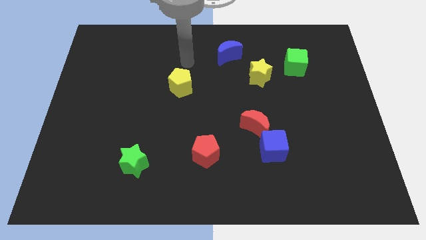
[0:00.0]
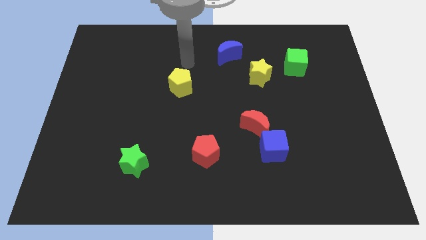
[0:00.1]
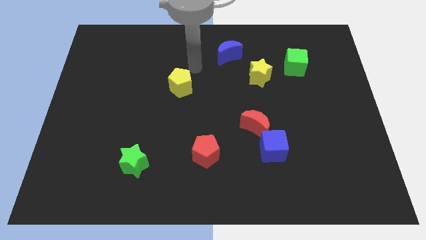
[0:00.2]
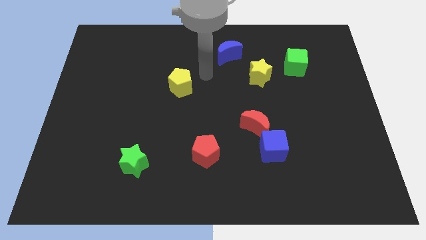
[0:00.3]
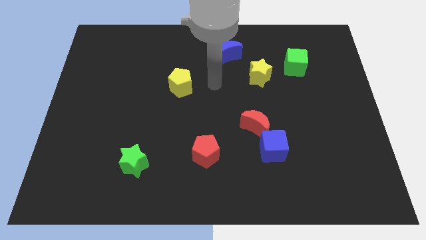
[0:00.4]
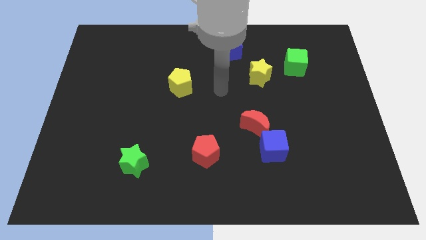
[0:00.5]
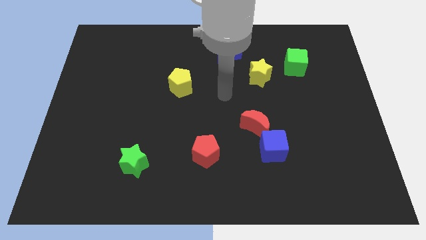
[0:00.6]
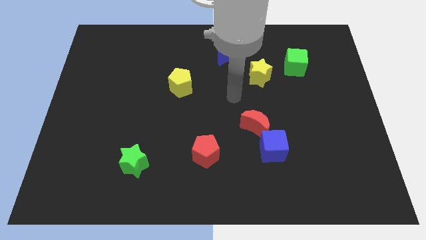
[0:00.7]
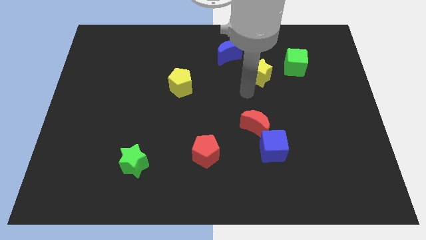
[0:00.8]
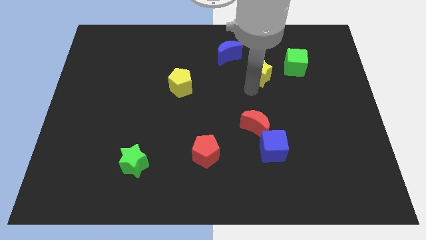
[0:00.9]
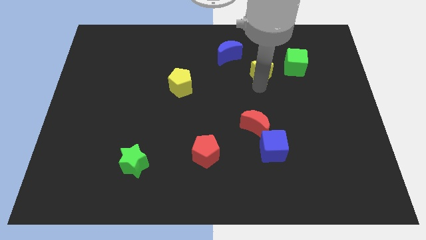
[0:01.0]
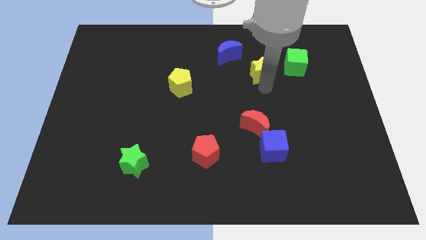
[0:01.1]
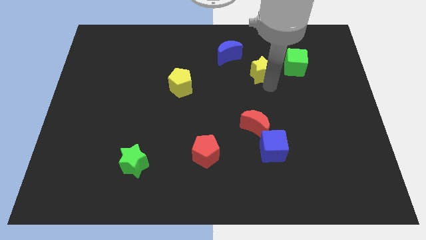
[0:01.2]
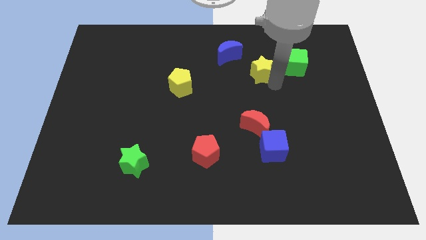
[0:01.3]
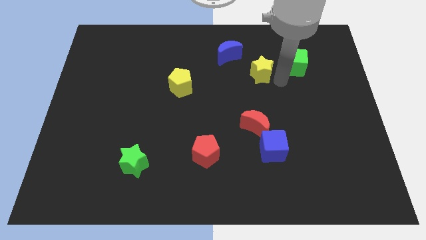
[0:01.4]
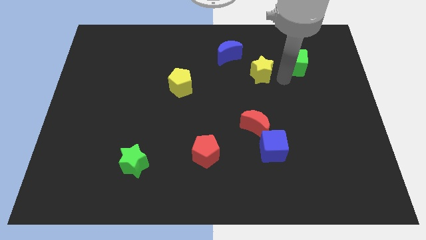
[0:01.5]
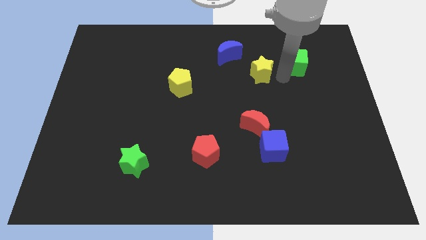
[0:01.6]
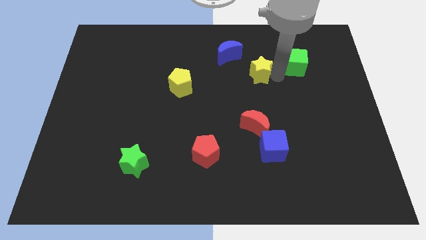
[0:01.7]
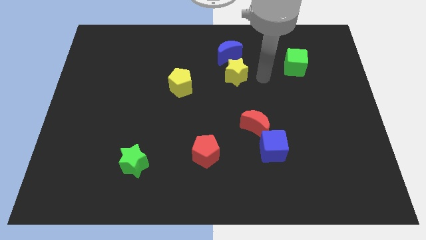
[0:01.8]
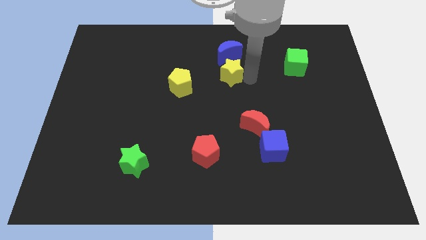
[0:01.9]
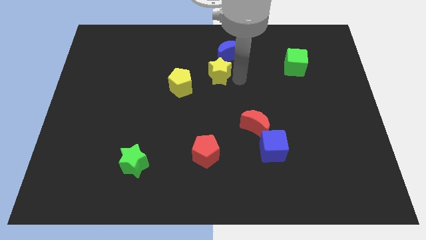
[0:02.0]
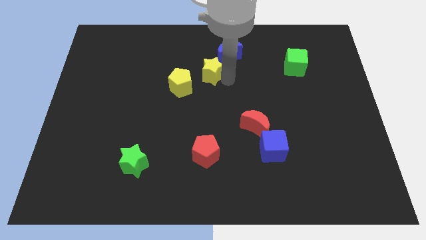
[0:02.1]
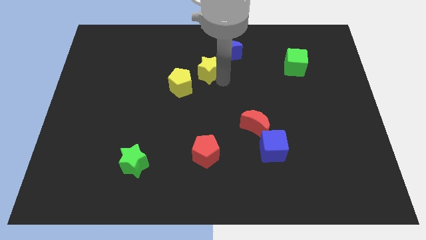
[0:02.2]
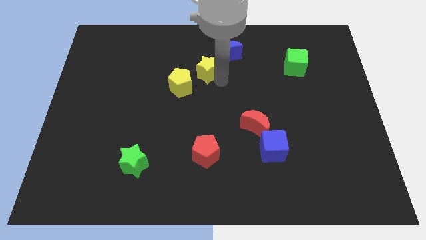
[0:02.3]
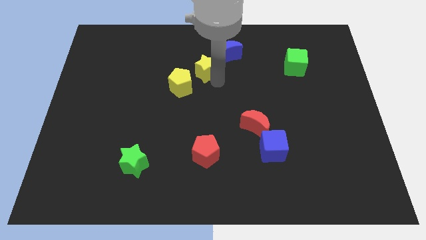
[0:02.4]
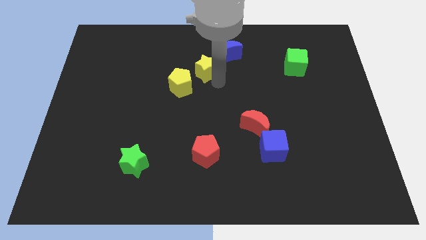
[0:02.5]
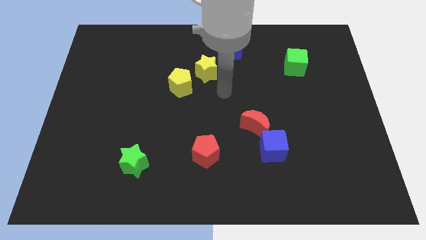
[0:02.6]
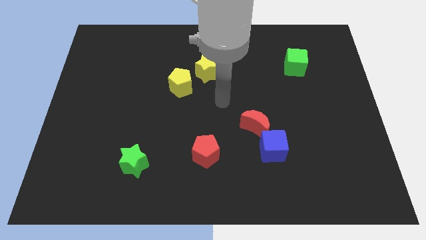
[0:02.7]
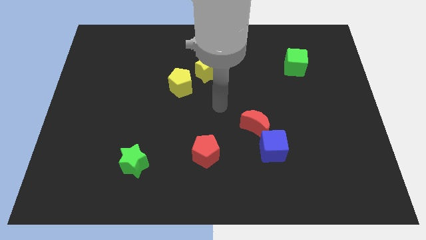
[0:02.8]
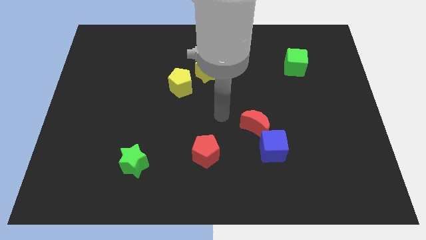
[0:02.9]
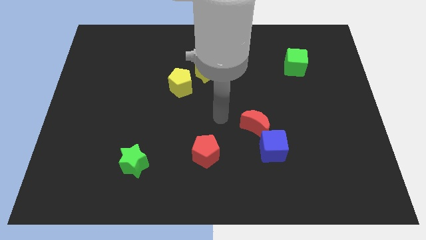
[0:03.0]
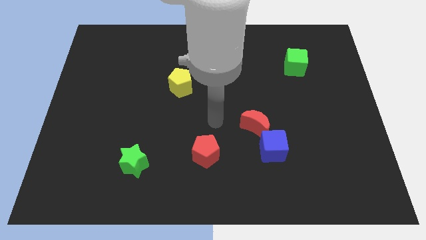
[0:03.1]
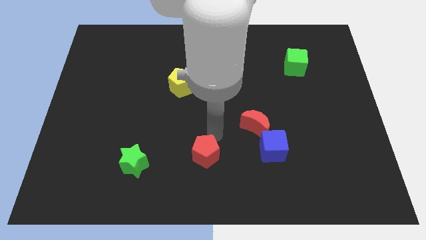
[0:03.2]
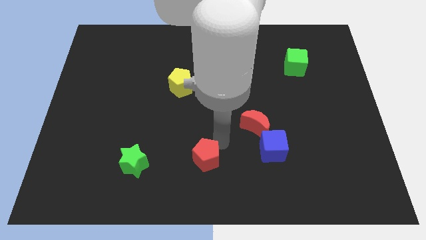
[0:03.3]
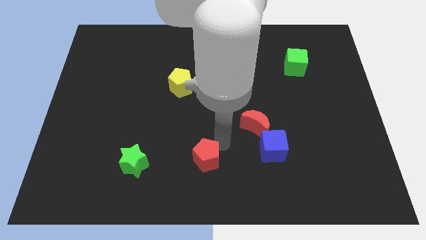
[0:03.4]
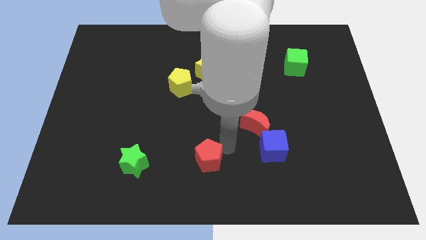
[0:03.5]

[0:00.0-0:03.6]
point your arm above red pentagon

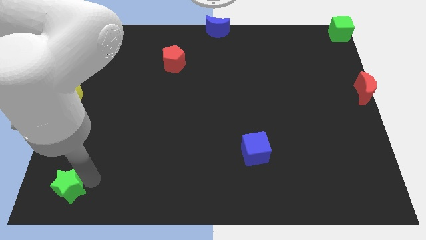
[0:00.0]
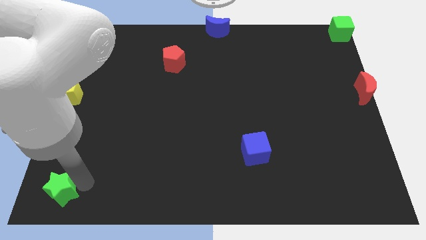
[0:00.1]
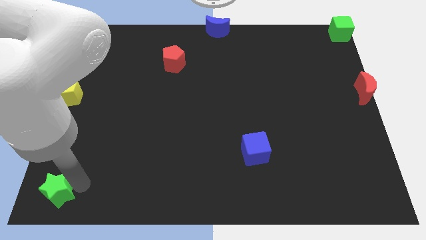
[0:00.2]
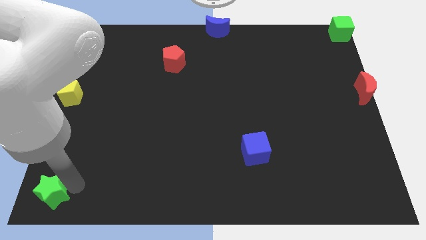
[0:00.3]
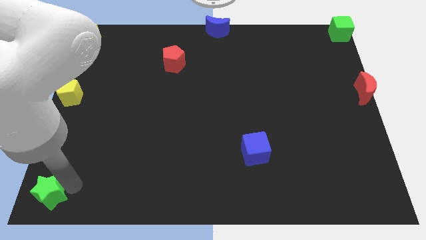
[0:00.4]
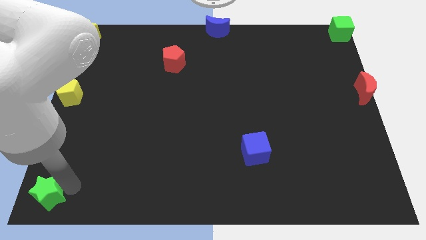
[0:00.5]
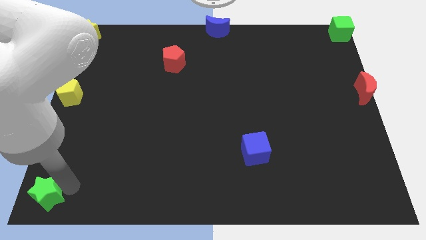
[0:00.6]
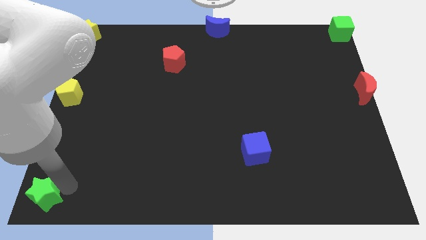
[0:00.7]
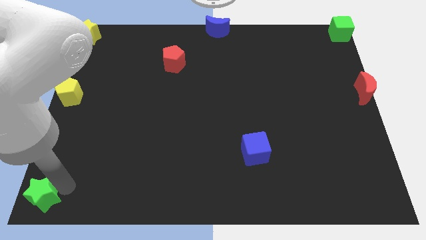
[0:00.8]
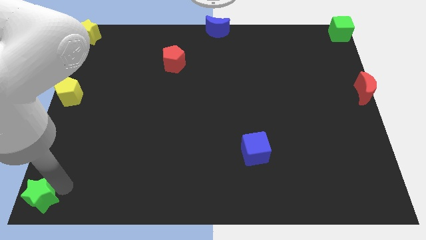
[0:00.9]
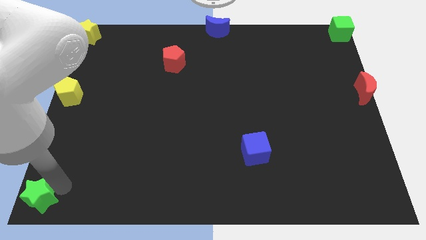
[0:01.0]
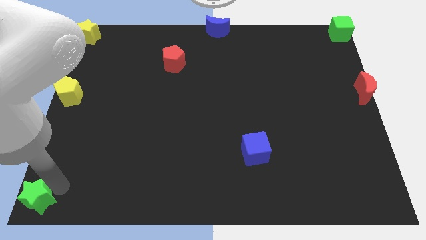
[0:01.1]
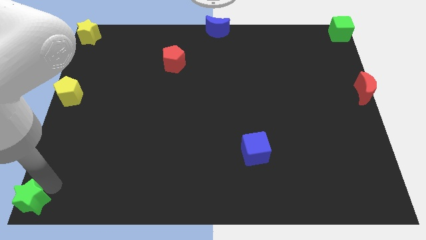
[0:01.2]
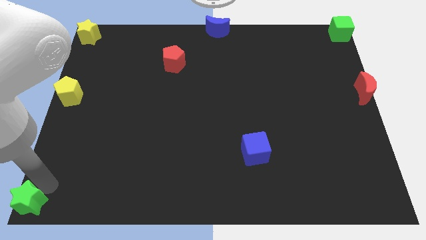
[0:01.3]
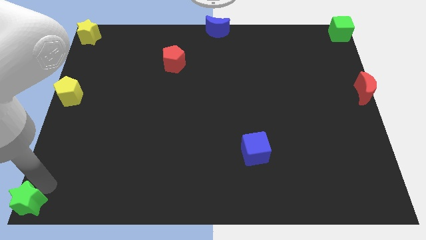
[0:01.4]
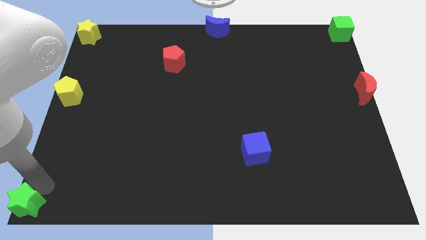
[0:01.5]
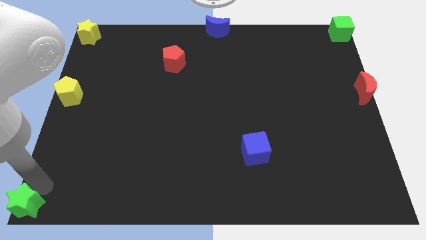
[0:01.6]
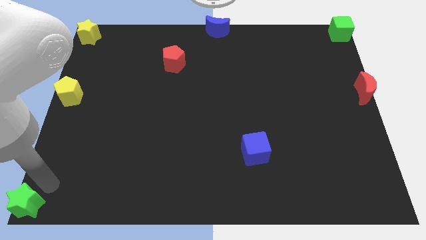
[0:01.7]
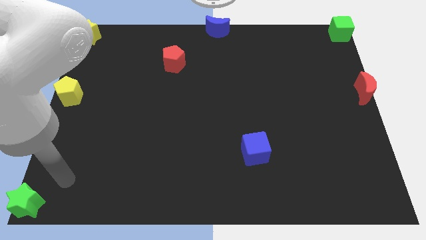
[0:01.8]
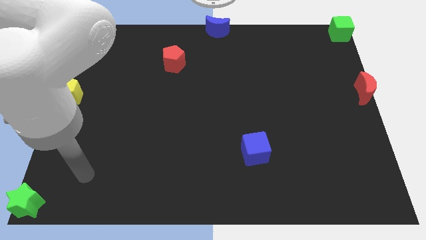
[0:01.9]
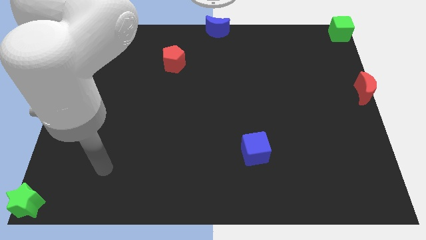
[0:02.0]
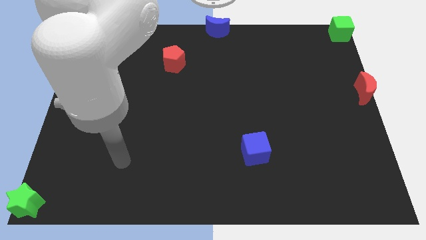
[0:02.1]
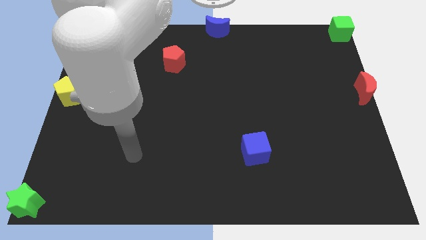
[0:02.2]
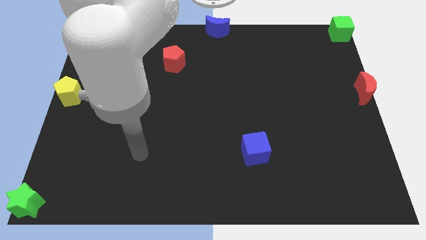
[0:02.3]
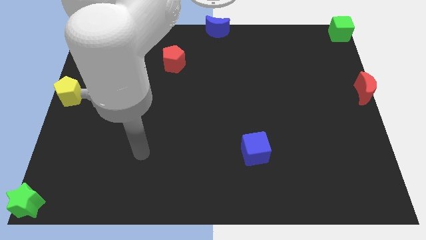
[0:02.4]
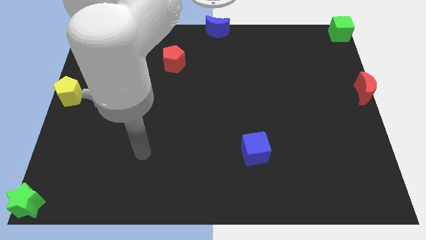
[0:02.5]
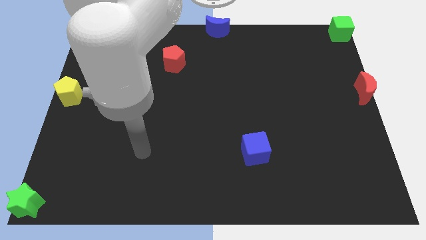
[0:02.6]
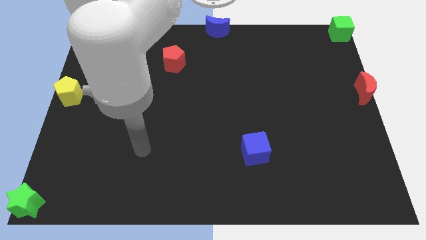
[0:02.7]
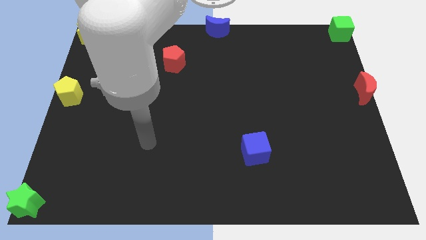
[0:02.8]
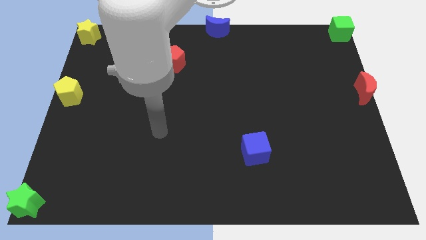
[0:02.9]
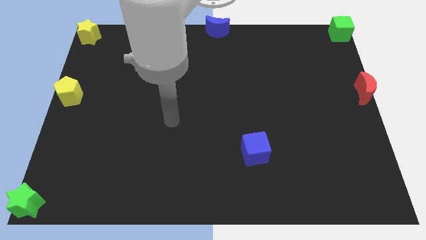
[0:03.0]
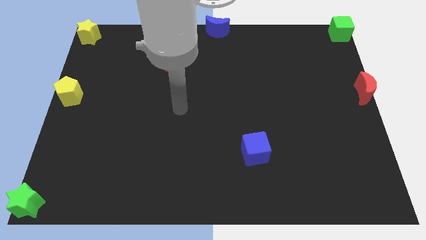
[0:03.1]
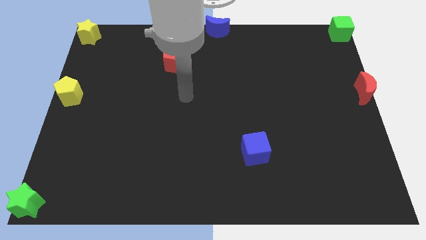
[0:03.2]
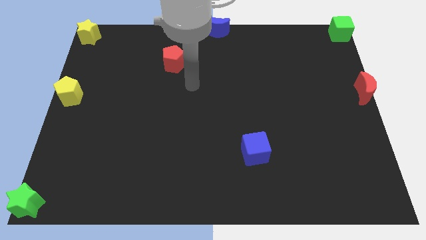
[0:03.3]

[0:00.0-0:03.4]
move the arm diagonally towards up

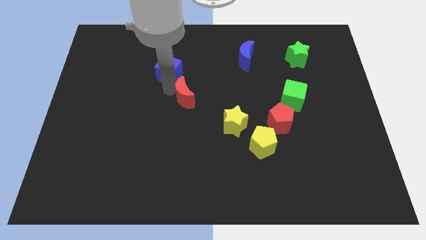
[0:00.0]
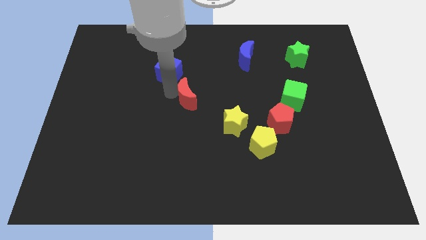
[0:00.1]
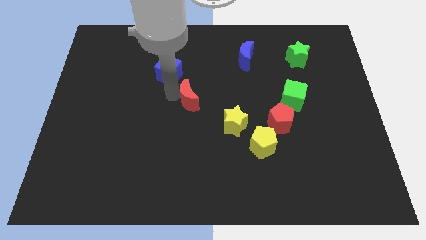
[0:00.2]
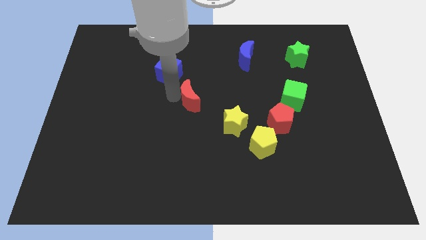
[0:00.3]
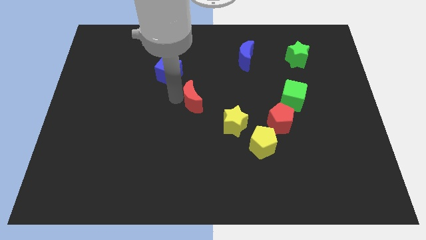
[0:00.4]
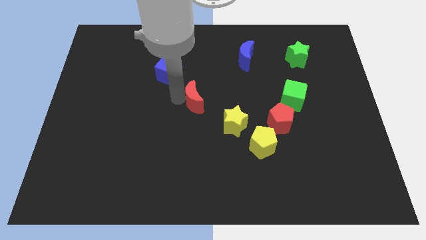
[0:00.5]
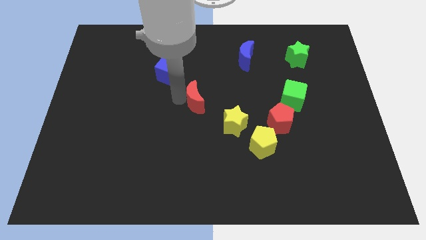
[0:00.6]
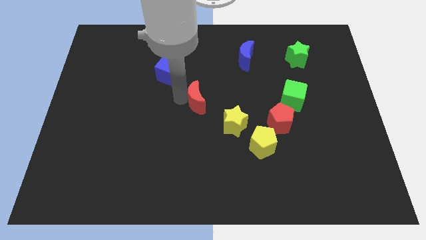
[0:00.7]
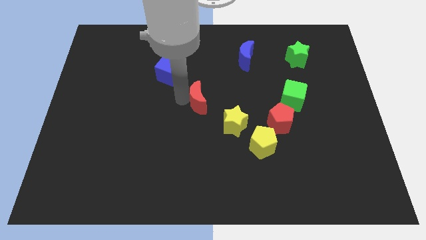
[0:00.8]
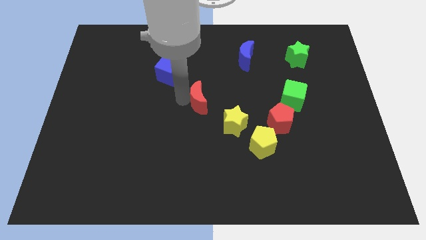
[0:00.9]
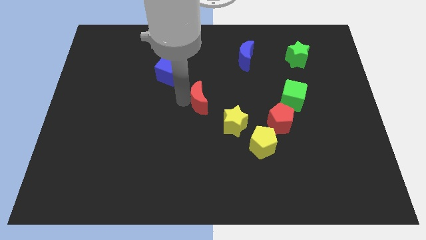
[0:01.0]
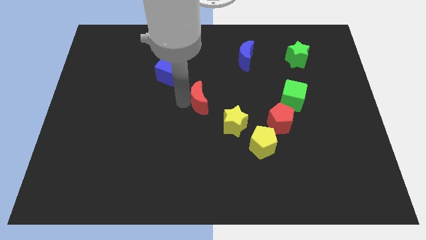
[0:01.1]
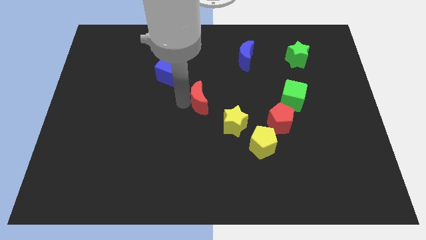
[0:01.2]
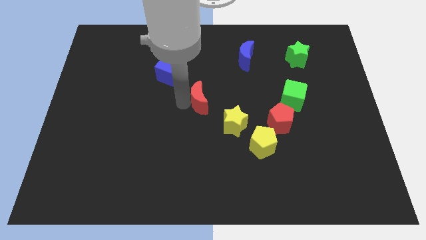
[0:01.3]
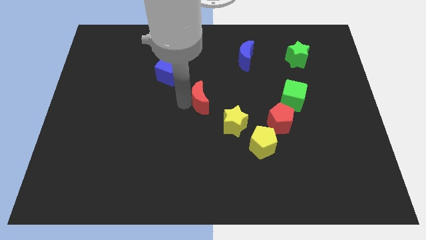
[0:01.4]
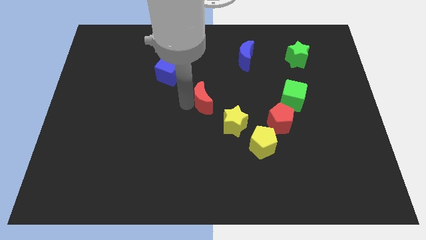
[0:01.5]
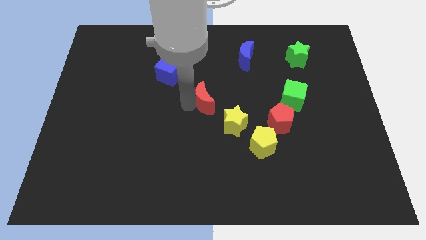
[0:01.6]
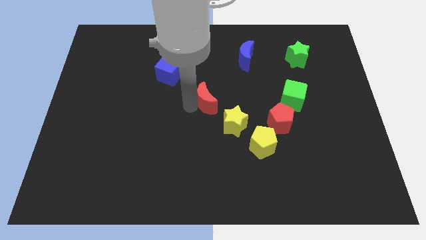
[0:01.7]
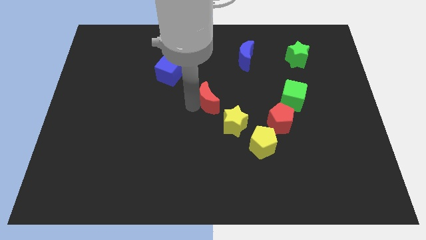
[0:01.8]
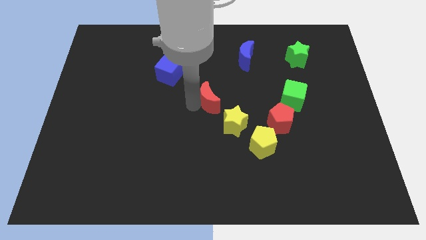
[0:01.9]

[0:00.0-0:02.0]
push the red crescent to the top left of the yellow star
